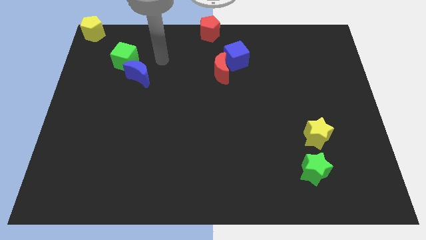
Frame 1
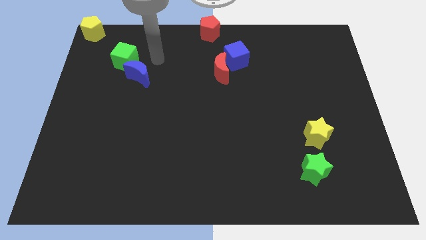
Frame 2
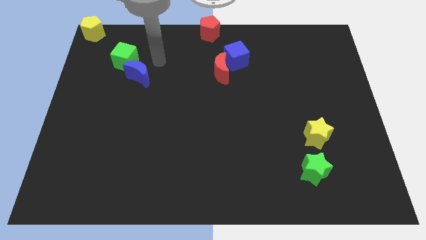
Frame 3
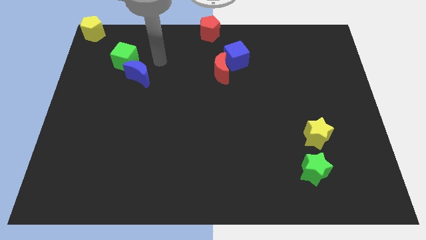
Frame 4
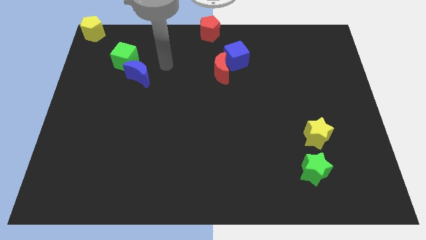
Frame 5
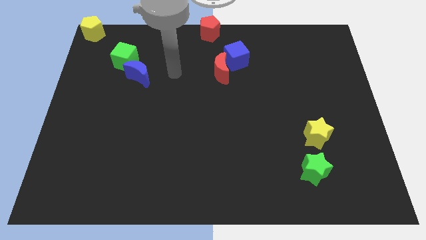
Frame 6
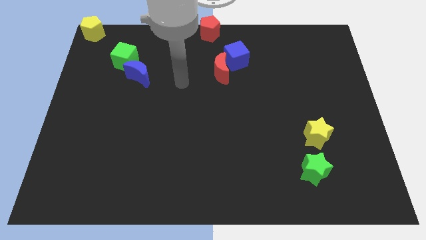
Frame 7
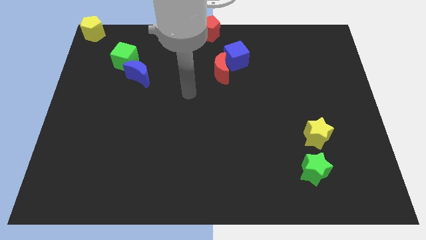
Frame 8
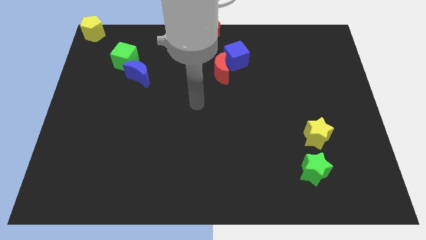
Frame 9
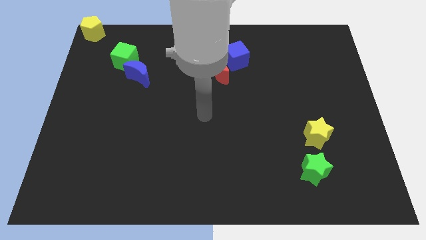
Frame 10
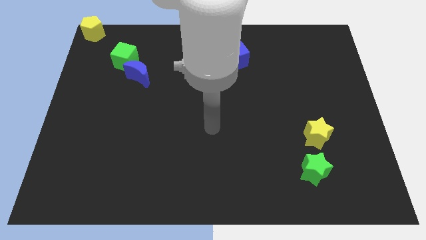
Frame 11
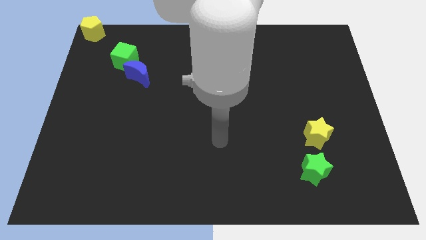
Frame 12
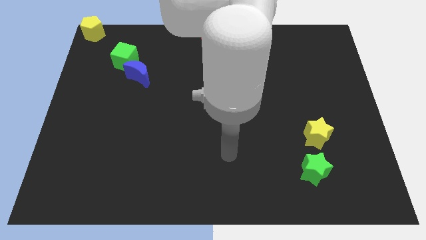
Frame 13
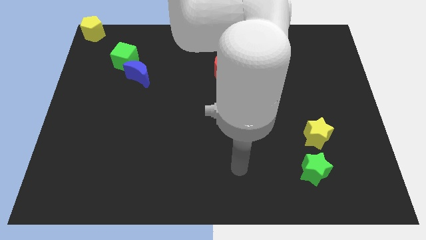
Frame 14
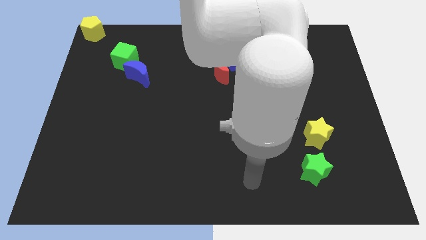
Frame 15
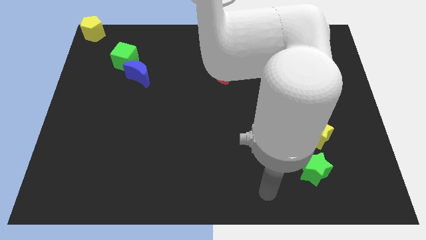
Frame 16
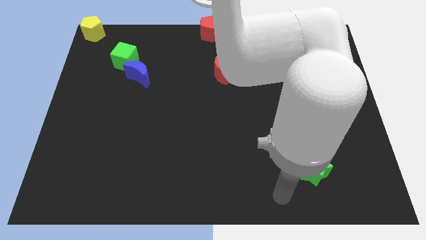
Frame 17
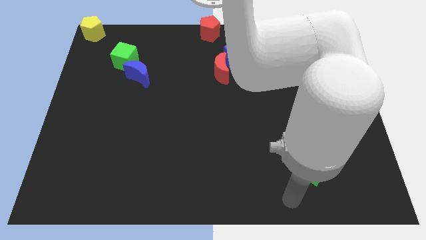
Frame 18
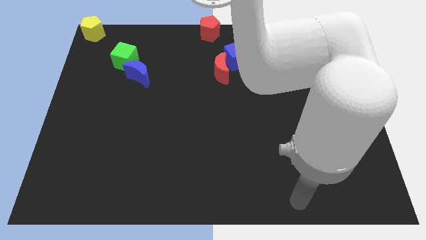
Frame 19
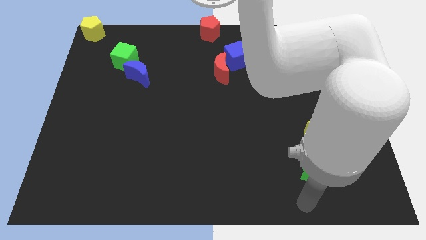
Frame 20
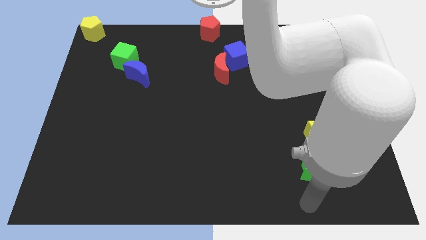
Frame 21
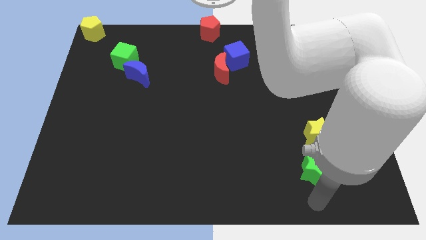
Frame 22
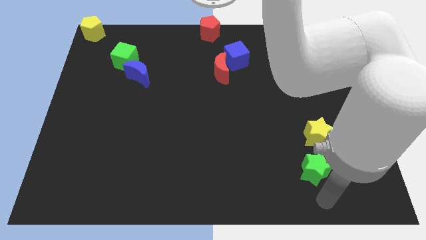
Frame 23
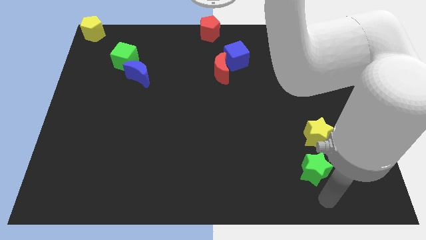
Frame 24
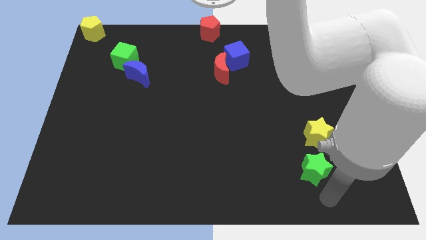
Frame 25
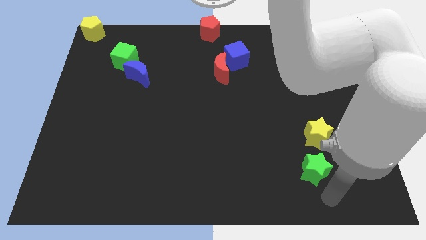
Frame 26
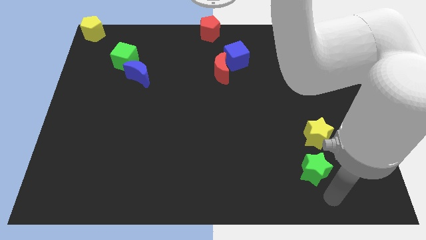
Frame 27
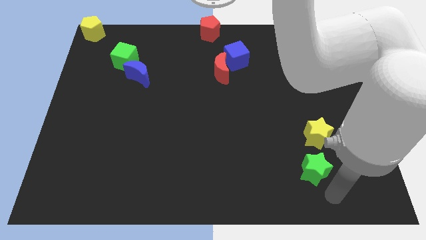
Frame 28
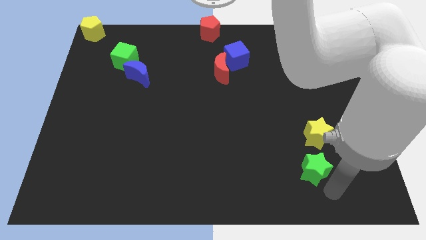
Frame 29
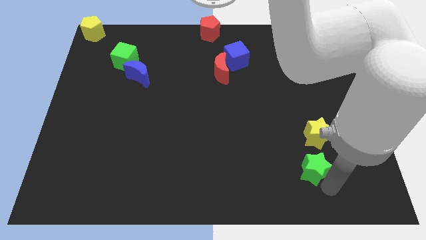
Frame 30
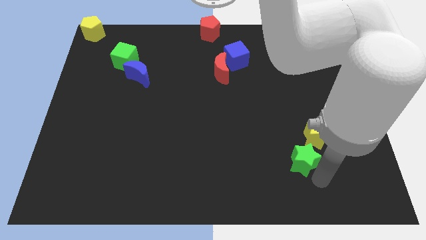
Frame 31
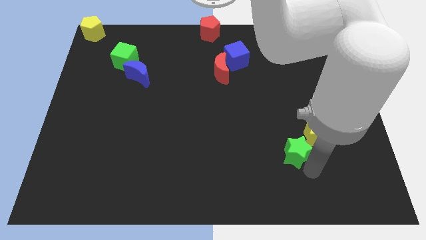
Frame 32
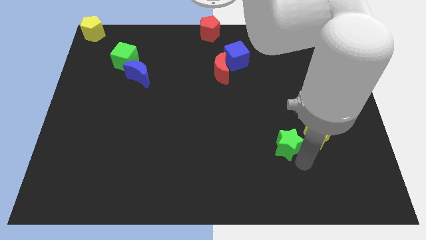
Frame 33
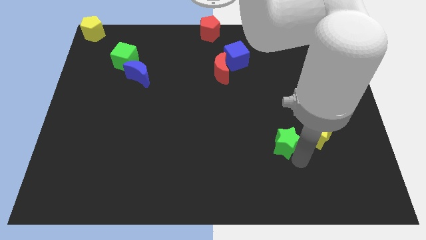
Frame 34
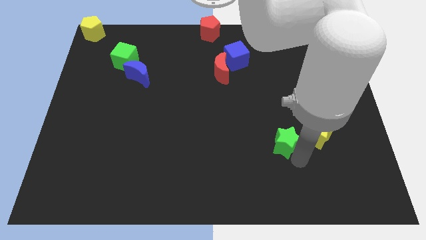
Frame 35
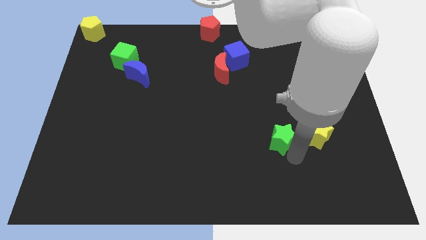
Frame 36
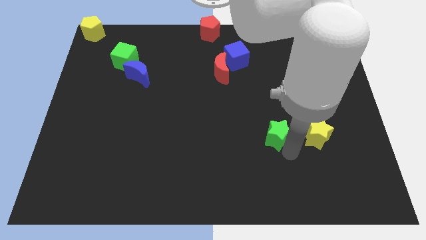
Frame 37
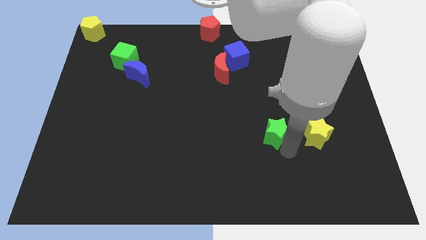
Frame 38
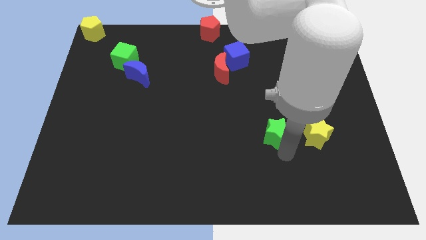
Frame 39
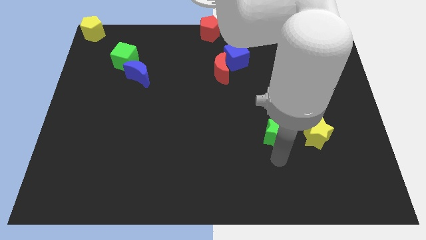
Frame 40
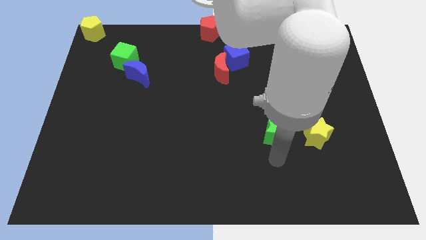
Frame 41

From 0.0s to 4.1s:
push the green star at the left side of the yellow star

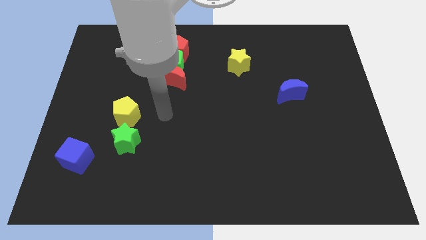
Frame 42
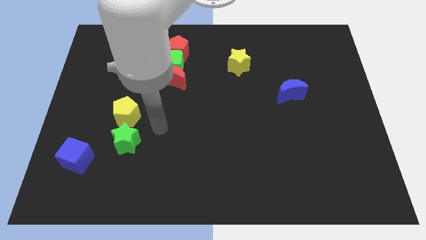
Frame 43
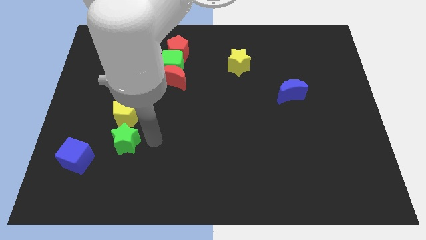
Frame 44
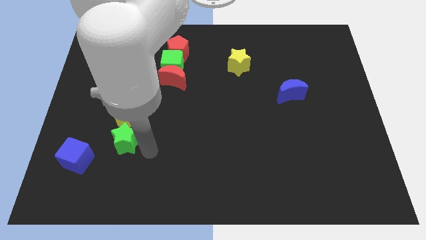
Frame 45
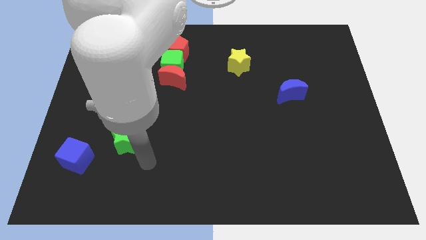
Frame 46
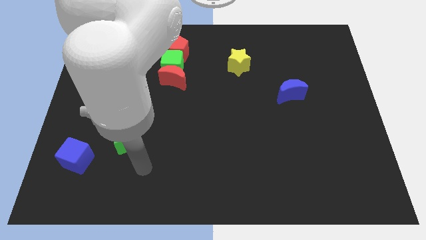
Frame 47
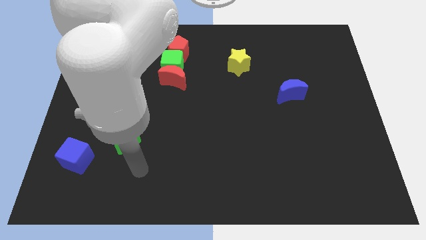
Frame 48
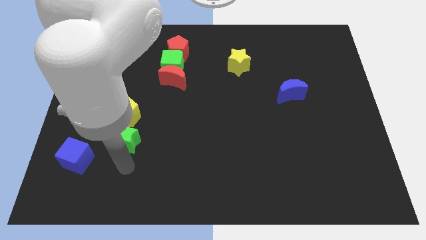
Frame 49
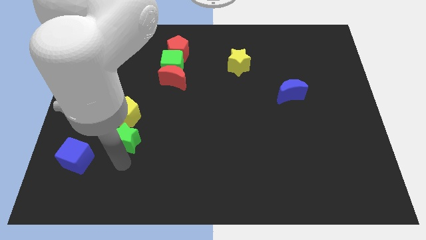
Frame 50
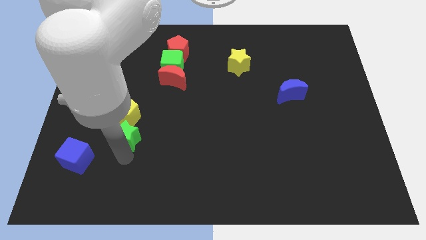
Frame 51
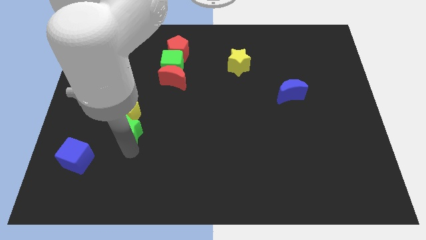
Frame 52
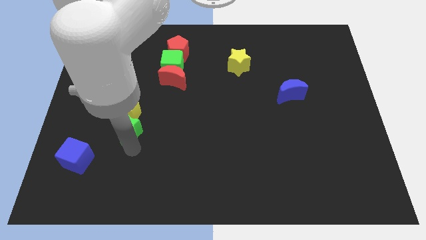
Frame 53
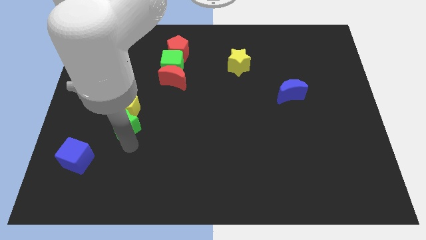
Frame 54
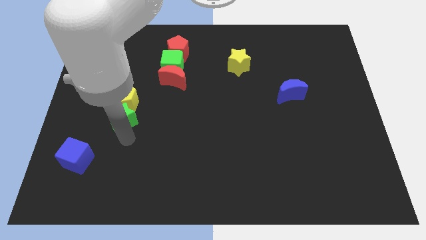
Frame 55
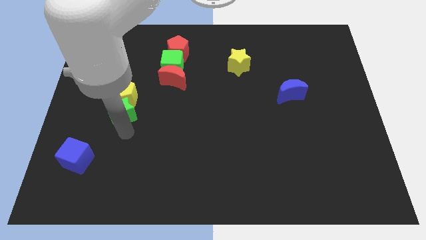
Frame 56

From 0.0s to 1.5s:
push the green star into the yellow pentagon

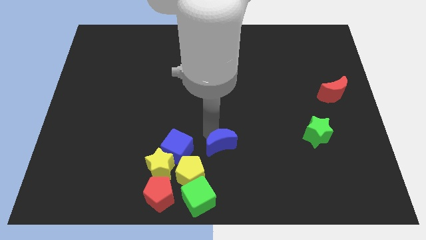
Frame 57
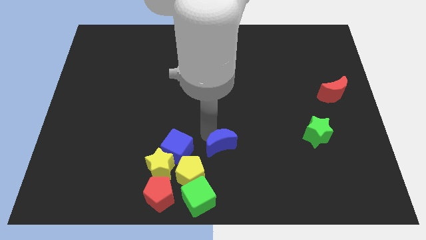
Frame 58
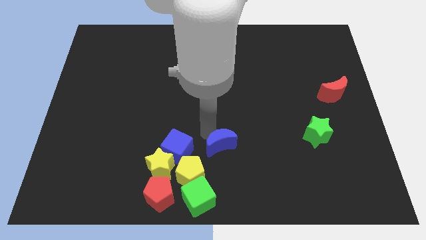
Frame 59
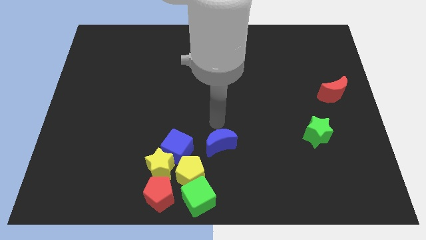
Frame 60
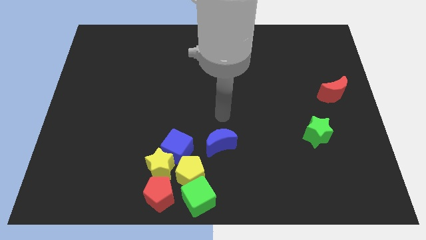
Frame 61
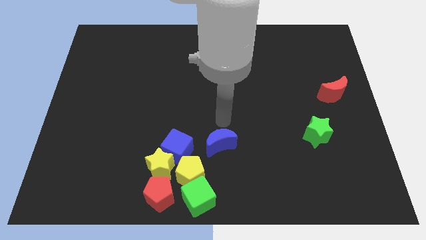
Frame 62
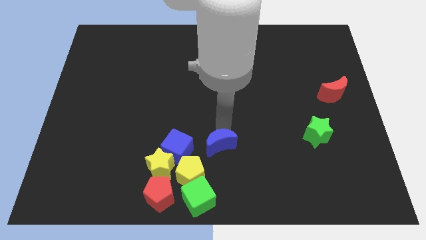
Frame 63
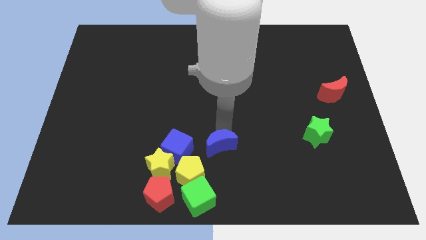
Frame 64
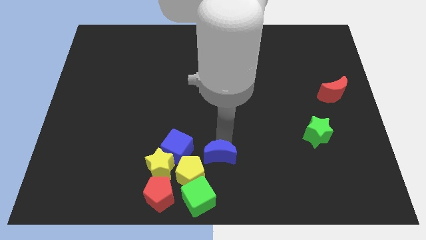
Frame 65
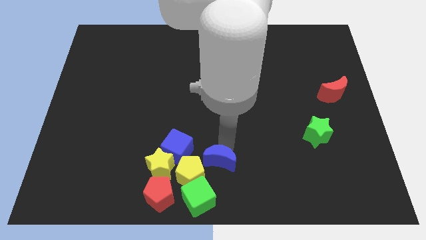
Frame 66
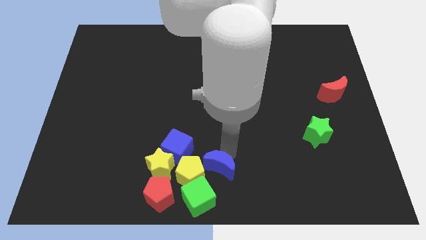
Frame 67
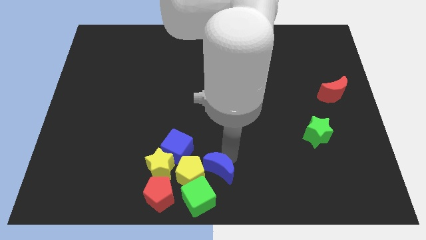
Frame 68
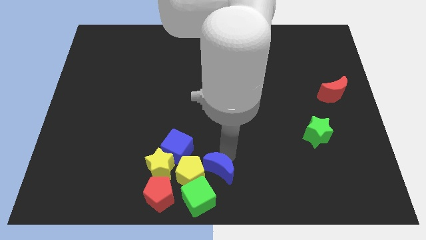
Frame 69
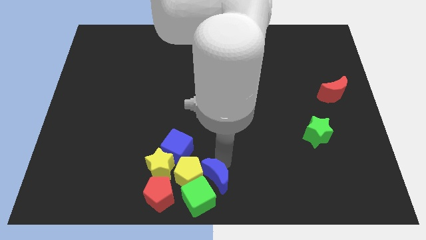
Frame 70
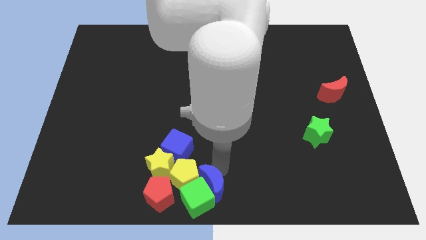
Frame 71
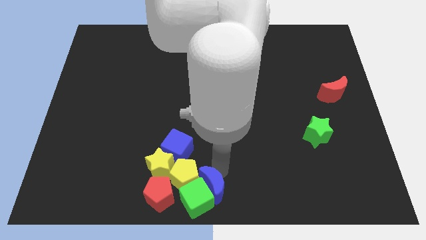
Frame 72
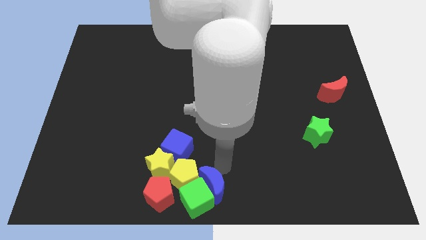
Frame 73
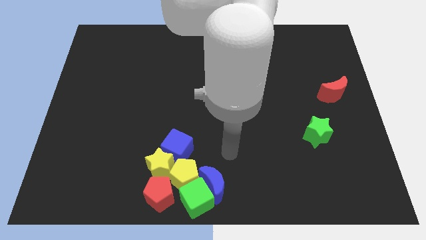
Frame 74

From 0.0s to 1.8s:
place blue moon beside the green cube

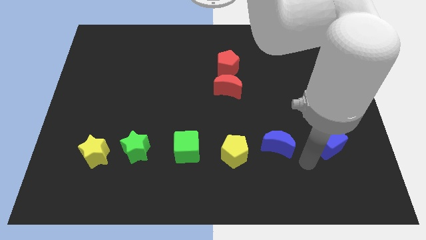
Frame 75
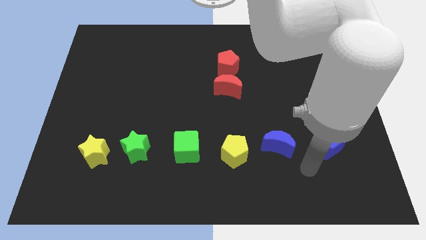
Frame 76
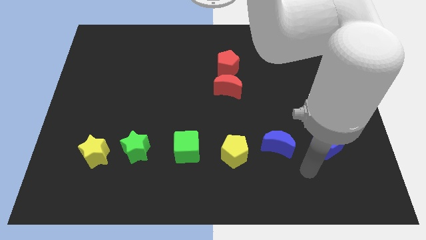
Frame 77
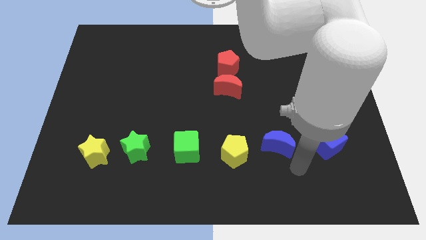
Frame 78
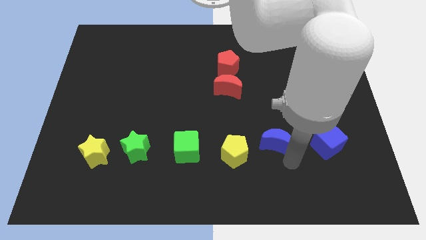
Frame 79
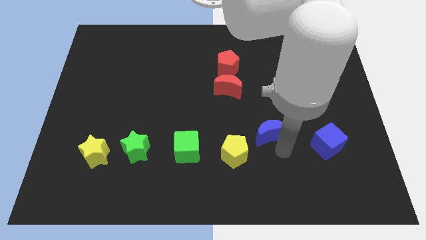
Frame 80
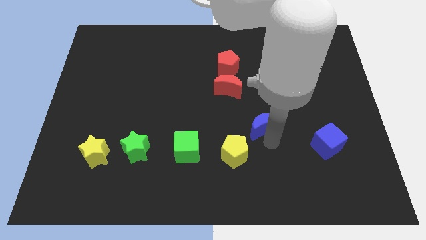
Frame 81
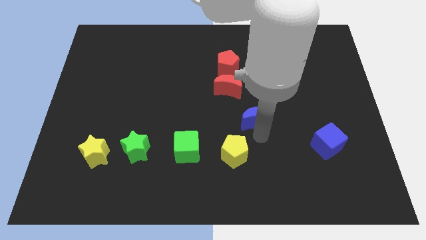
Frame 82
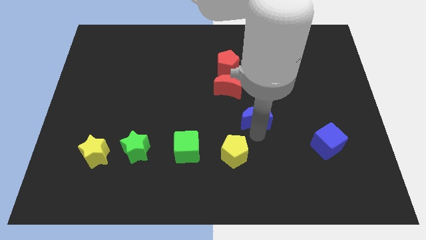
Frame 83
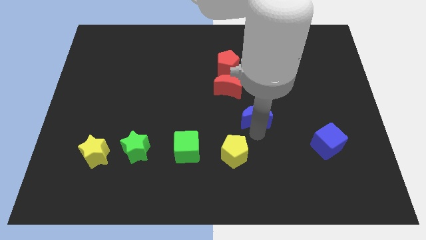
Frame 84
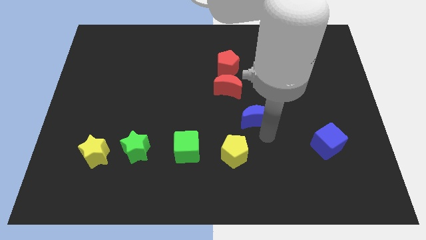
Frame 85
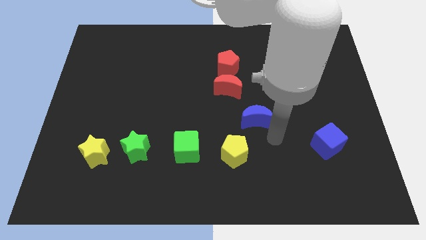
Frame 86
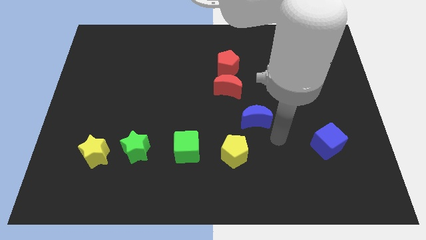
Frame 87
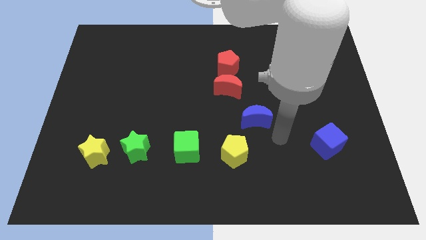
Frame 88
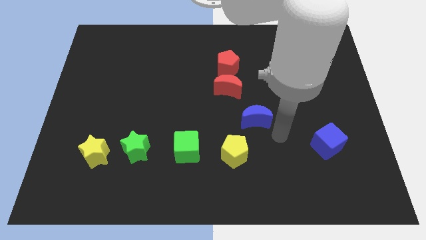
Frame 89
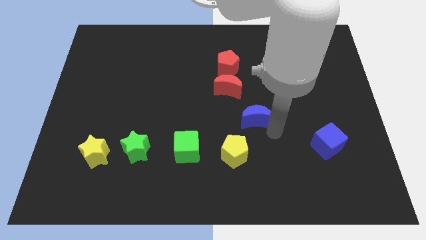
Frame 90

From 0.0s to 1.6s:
push the blue crescent towards the diagonal of the red crescent
